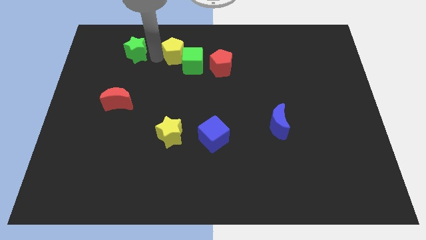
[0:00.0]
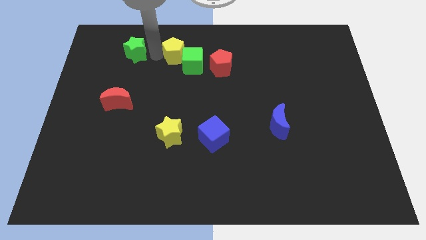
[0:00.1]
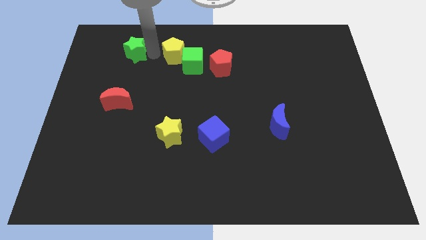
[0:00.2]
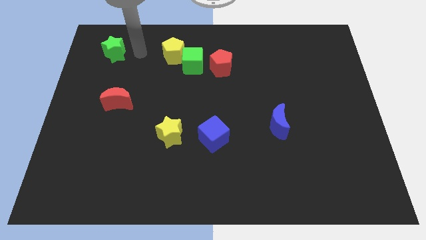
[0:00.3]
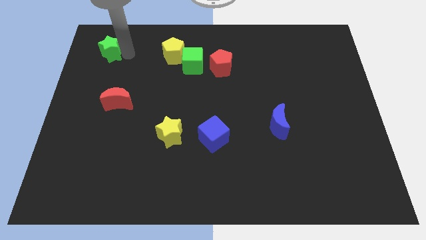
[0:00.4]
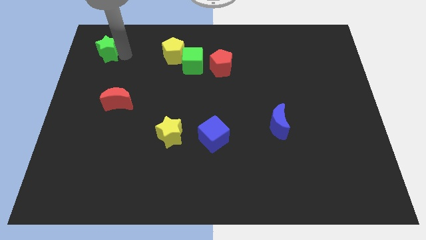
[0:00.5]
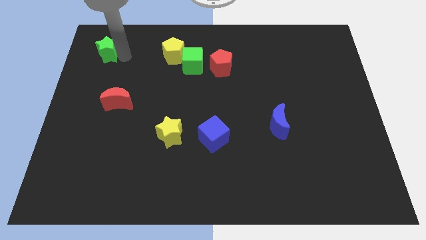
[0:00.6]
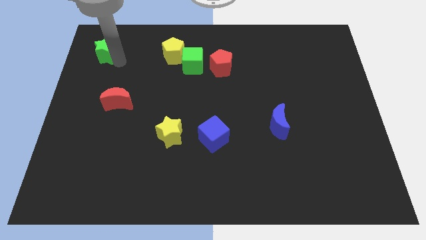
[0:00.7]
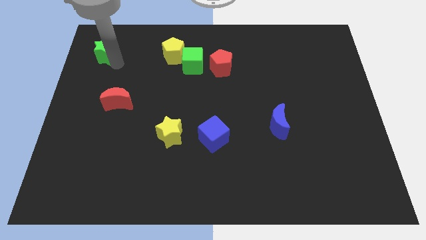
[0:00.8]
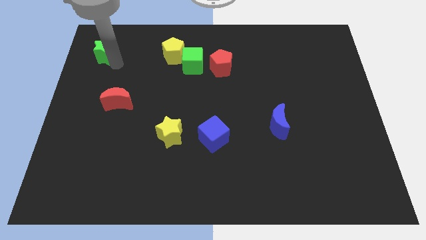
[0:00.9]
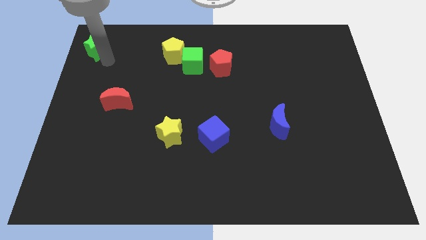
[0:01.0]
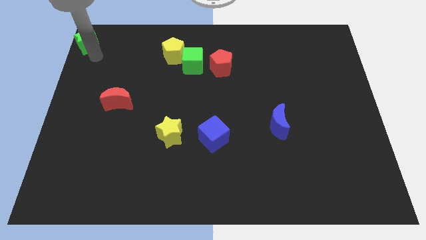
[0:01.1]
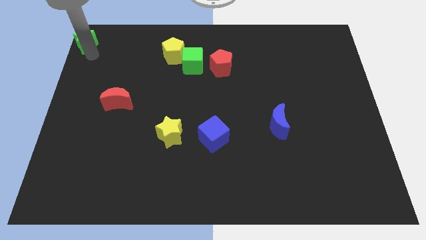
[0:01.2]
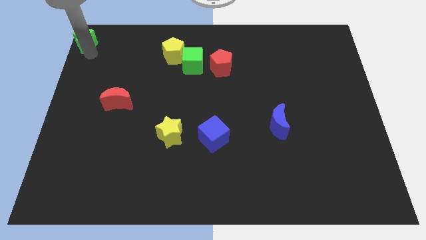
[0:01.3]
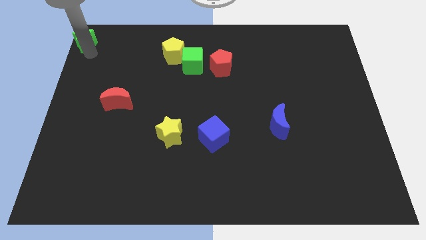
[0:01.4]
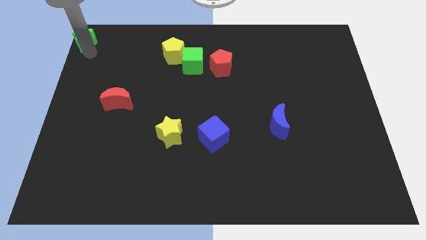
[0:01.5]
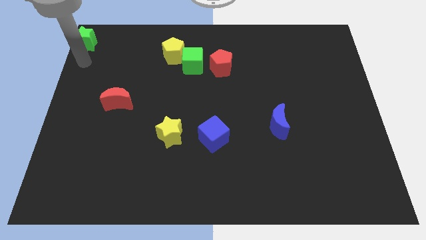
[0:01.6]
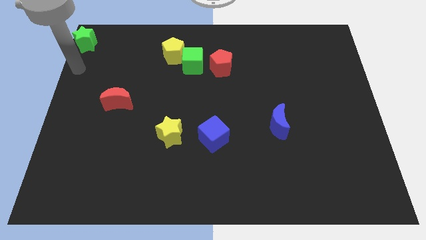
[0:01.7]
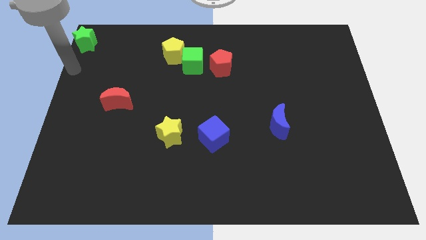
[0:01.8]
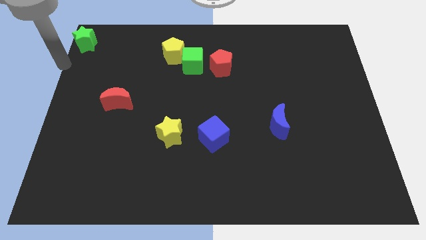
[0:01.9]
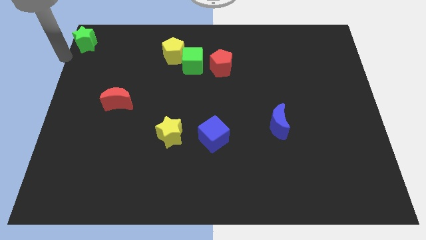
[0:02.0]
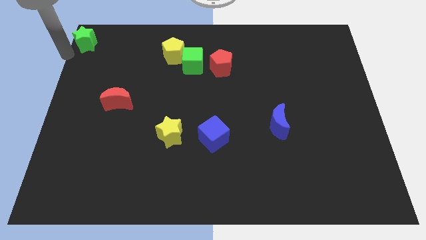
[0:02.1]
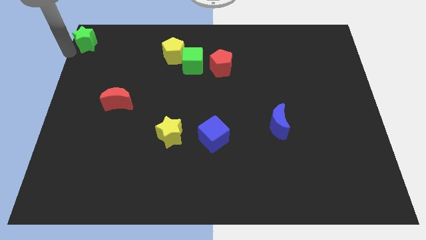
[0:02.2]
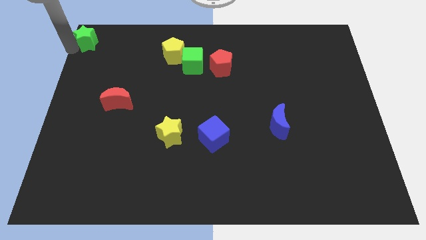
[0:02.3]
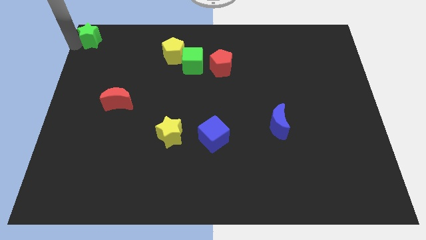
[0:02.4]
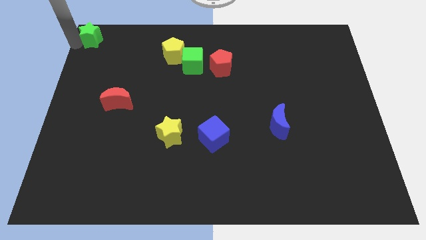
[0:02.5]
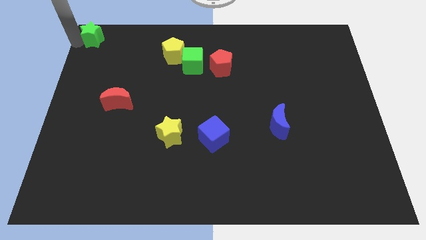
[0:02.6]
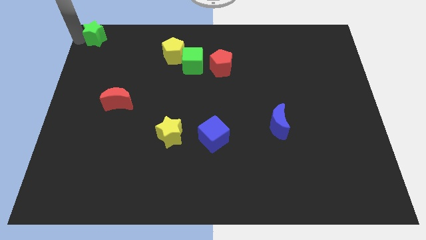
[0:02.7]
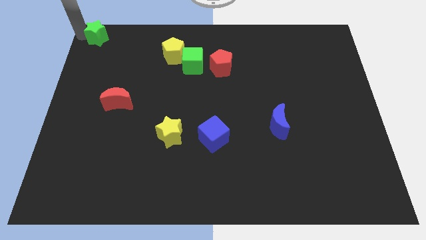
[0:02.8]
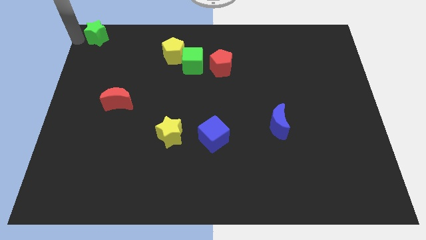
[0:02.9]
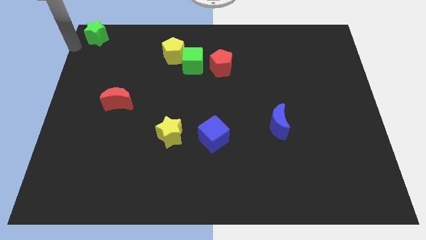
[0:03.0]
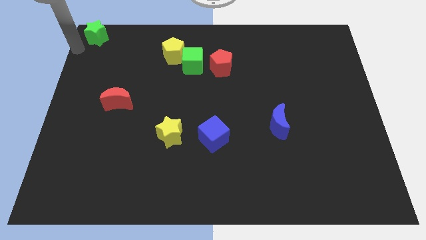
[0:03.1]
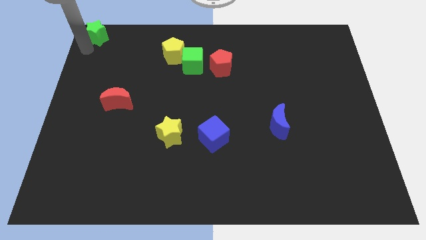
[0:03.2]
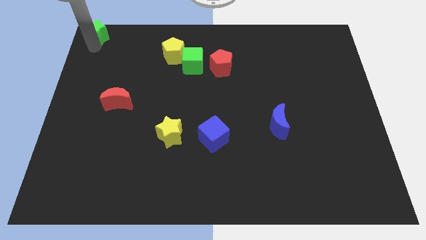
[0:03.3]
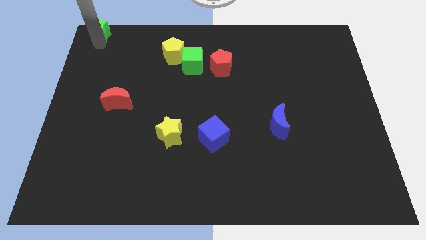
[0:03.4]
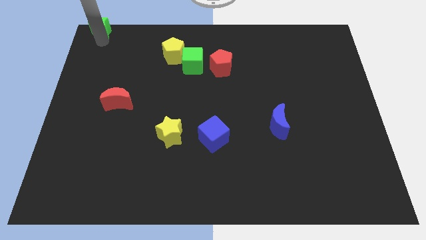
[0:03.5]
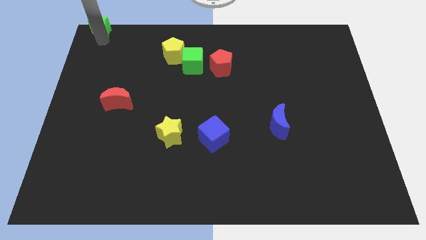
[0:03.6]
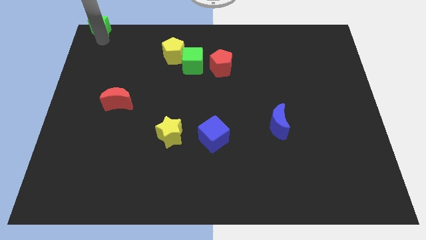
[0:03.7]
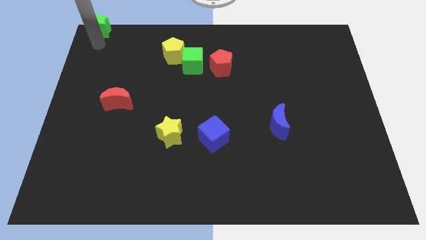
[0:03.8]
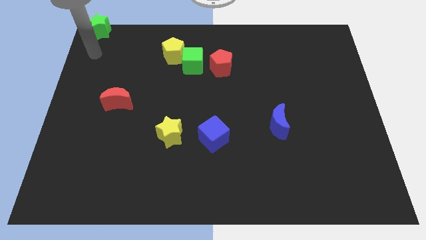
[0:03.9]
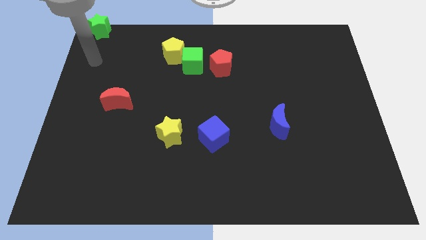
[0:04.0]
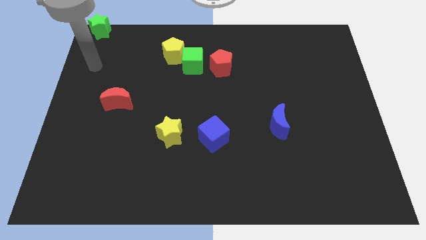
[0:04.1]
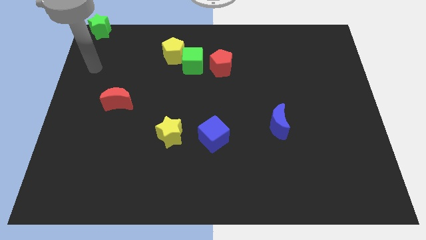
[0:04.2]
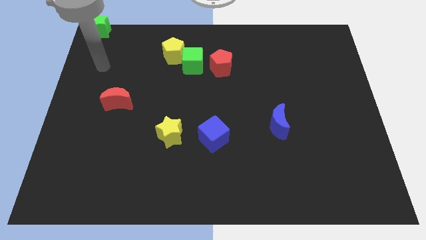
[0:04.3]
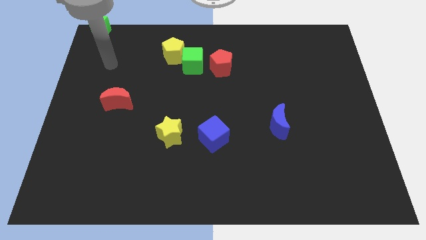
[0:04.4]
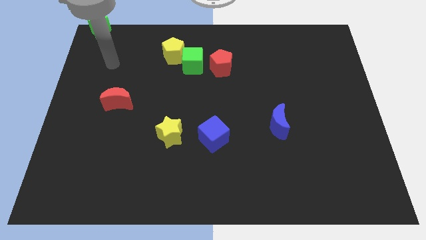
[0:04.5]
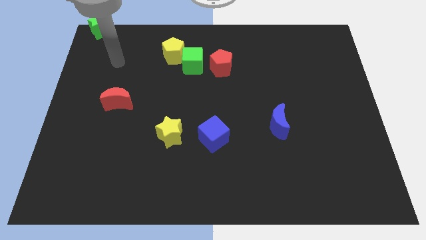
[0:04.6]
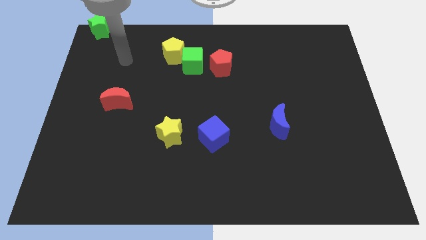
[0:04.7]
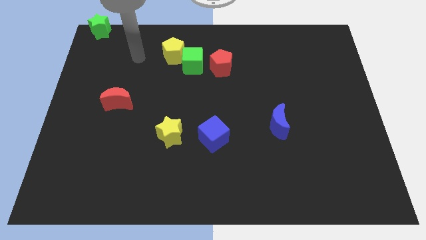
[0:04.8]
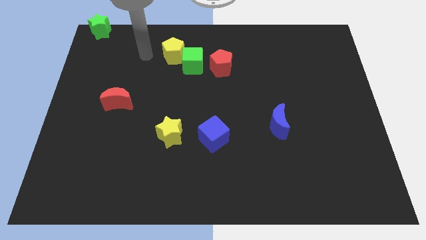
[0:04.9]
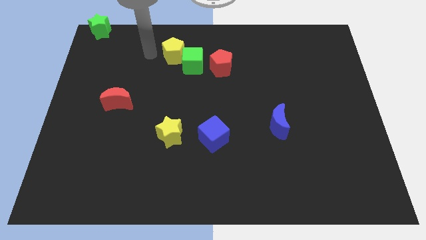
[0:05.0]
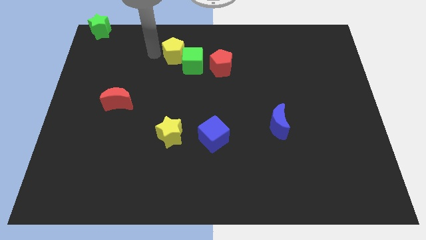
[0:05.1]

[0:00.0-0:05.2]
place green star at the top left corner of the board

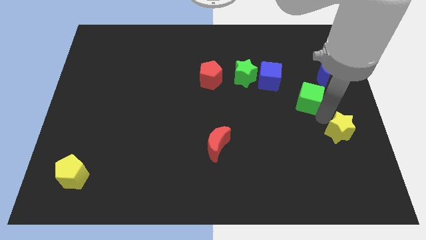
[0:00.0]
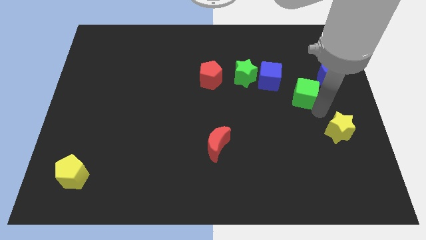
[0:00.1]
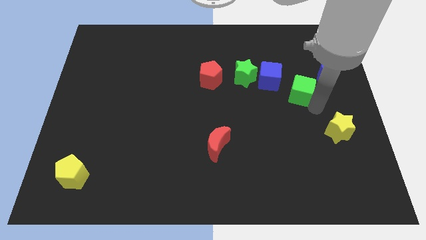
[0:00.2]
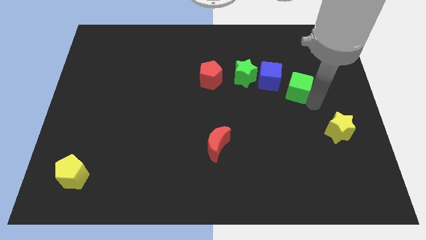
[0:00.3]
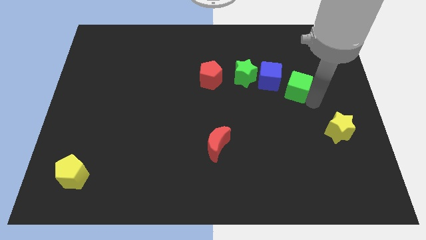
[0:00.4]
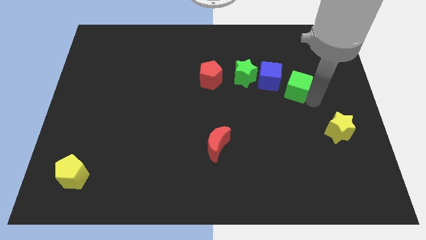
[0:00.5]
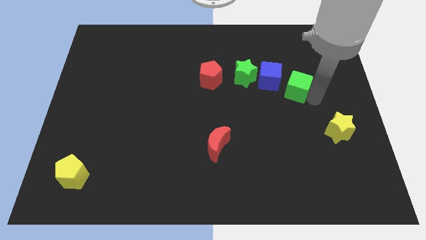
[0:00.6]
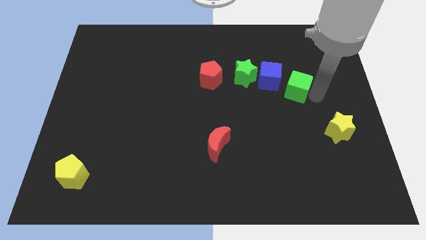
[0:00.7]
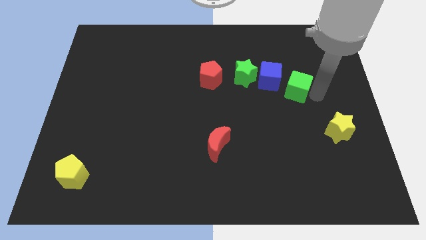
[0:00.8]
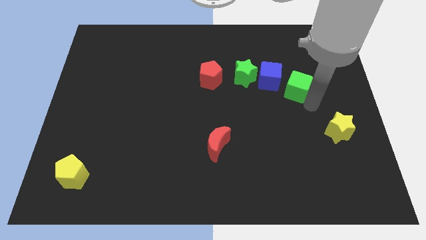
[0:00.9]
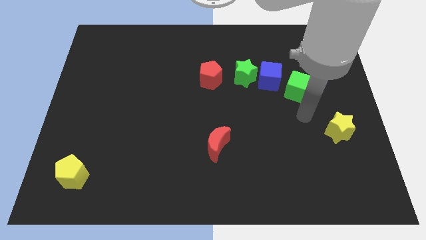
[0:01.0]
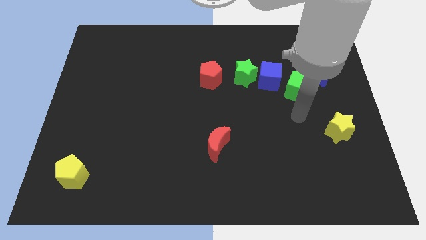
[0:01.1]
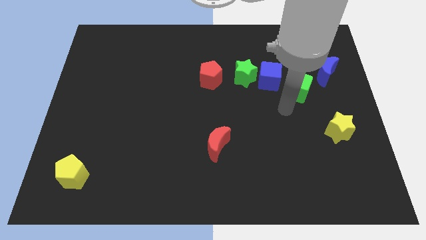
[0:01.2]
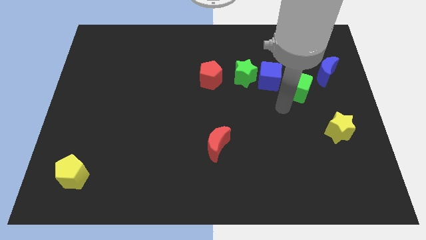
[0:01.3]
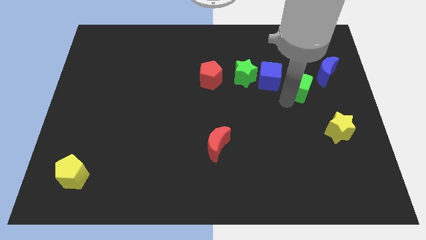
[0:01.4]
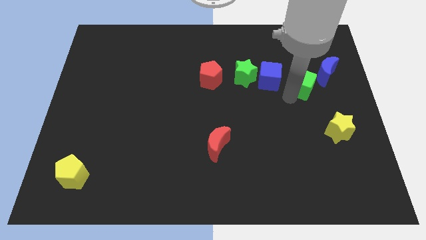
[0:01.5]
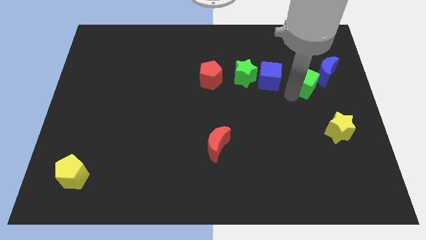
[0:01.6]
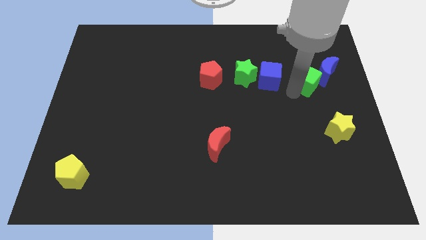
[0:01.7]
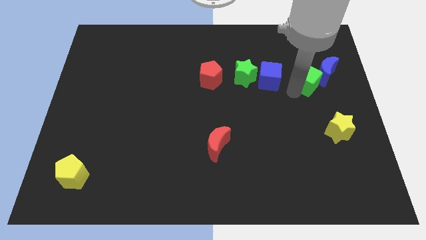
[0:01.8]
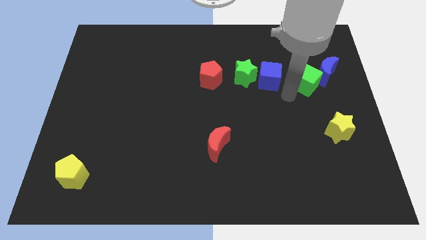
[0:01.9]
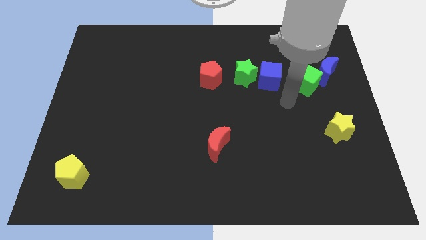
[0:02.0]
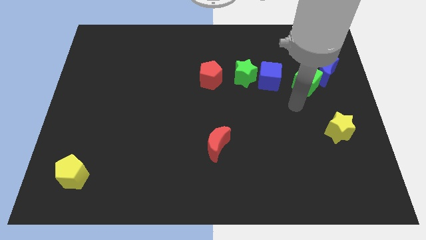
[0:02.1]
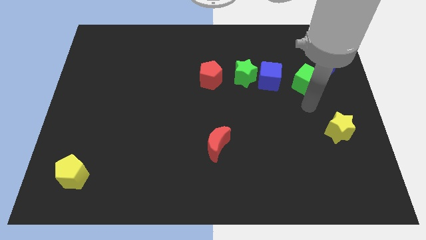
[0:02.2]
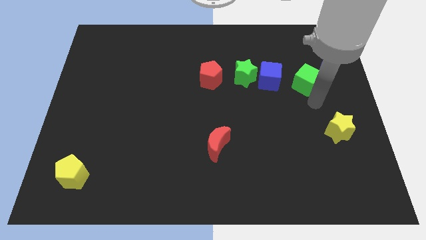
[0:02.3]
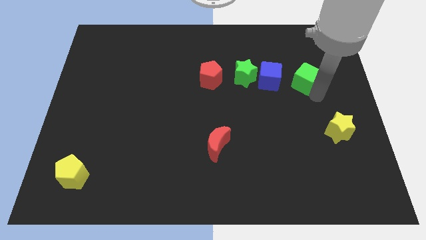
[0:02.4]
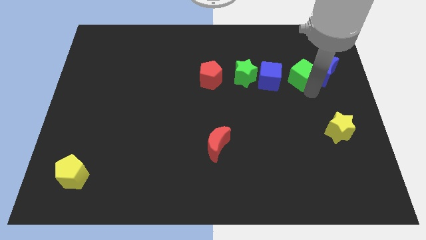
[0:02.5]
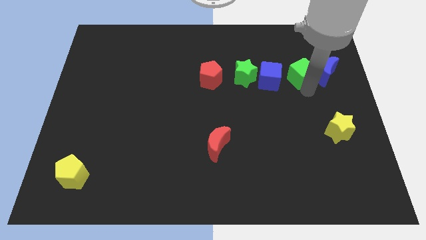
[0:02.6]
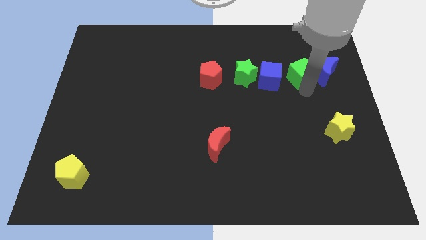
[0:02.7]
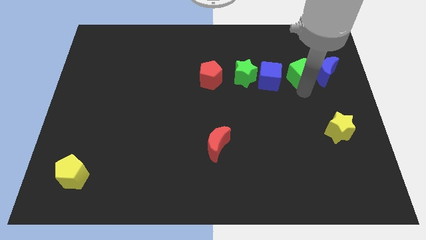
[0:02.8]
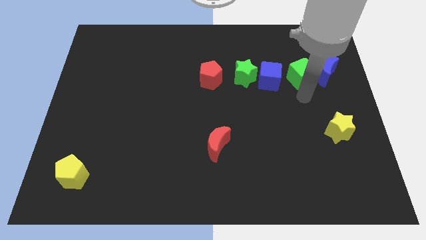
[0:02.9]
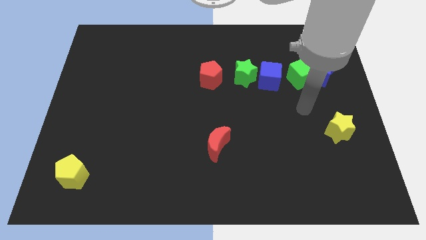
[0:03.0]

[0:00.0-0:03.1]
push the green cube to the right of the blue cube

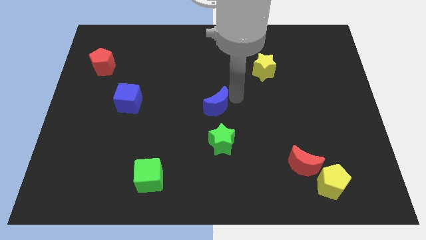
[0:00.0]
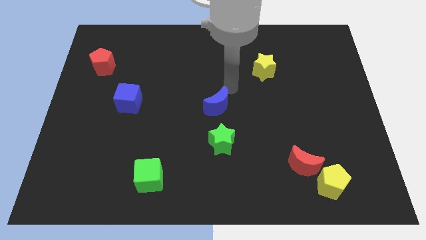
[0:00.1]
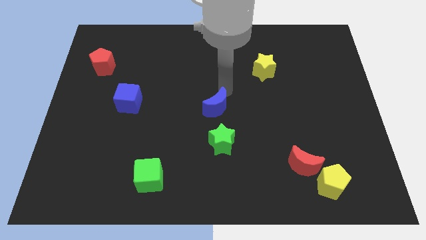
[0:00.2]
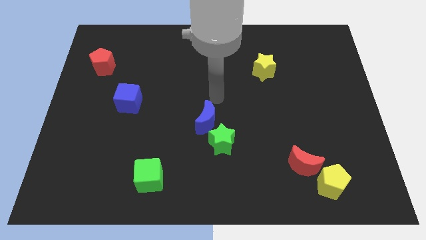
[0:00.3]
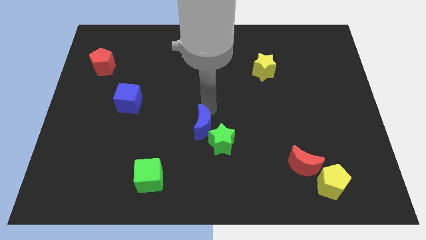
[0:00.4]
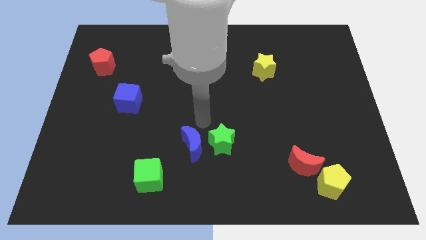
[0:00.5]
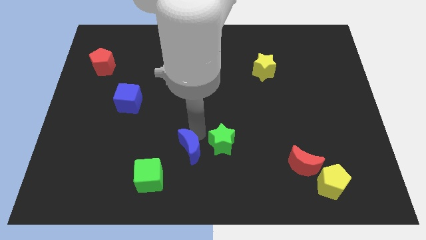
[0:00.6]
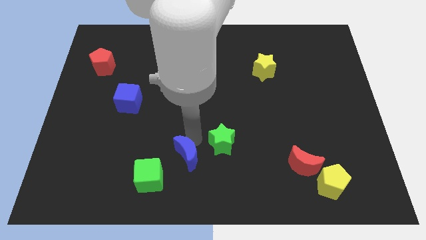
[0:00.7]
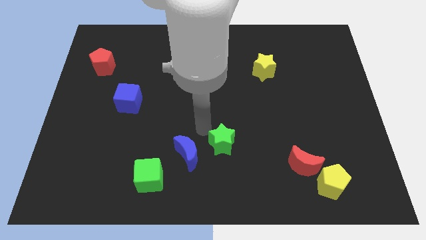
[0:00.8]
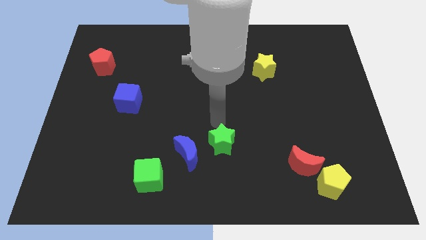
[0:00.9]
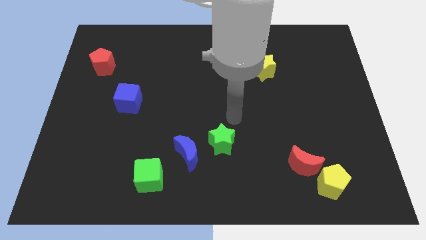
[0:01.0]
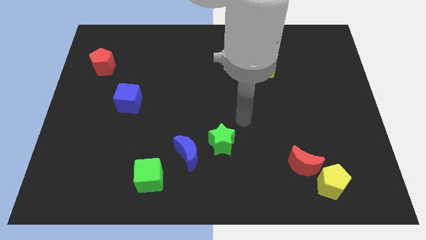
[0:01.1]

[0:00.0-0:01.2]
place the blue crescent diagonally in between the green blocks
